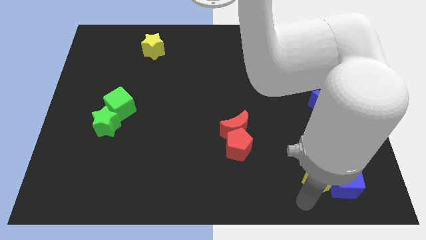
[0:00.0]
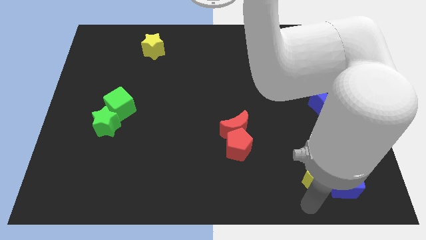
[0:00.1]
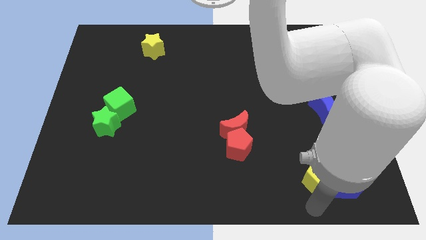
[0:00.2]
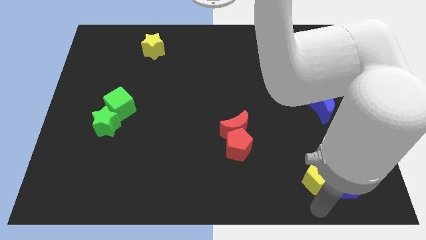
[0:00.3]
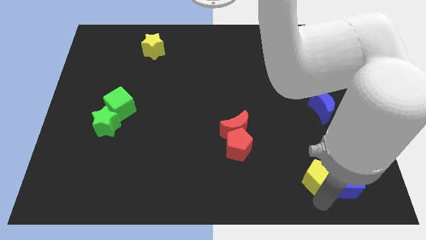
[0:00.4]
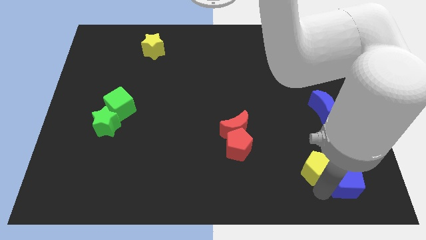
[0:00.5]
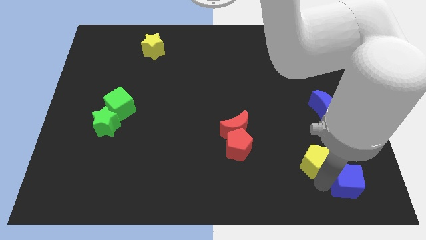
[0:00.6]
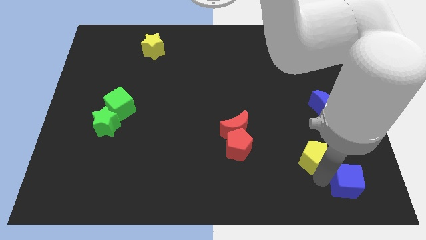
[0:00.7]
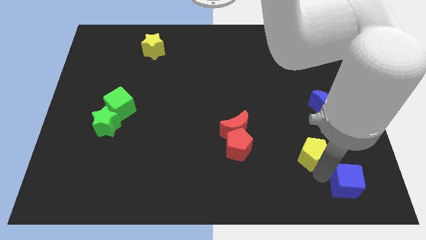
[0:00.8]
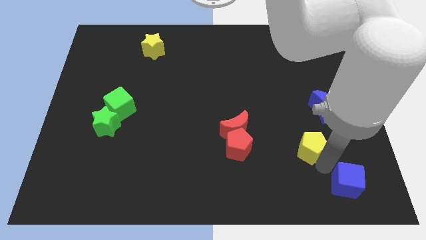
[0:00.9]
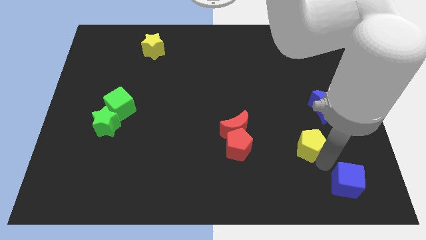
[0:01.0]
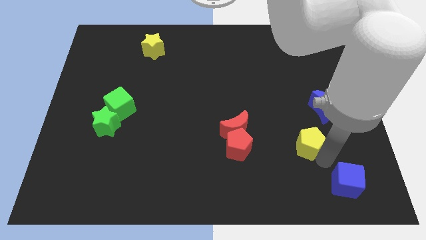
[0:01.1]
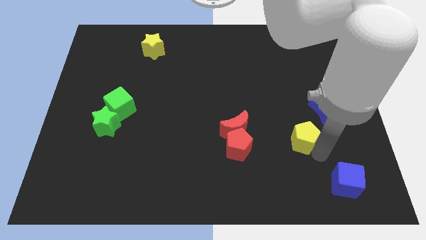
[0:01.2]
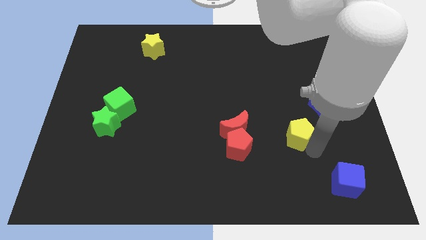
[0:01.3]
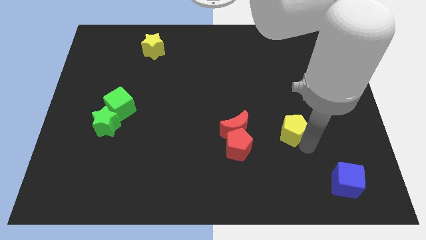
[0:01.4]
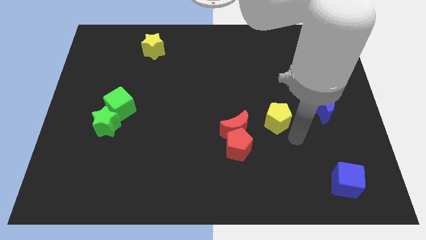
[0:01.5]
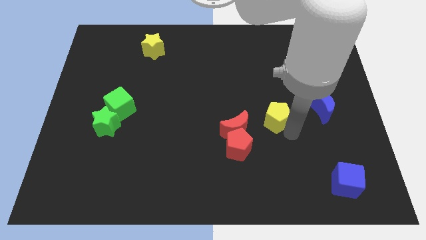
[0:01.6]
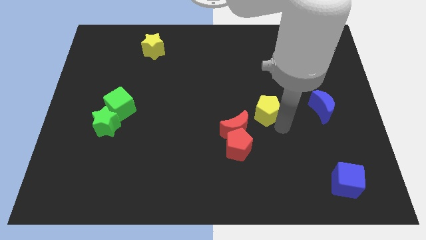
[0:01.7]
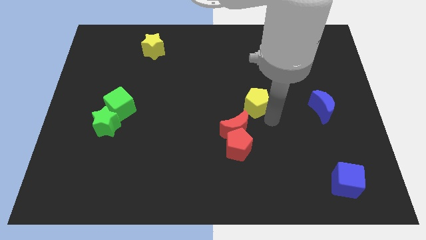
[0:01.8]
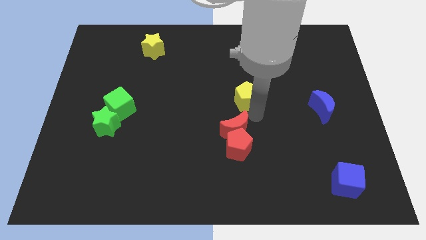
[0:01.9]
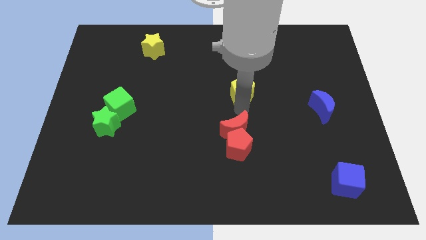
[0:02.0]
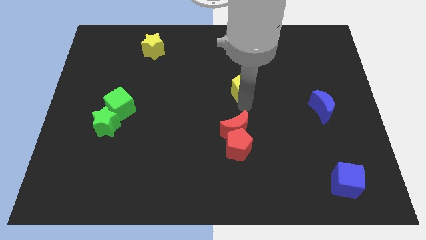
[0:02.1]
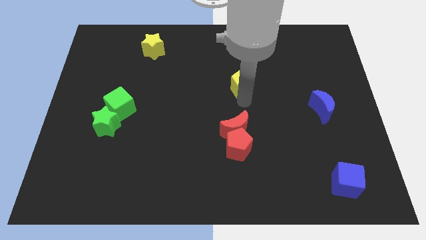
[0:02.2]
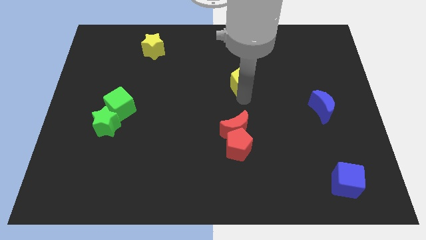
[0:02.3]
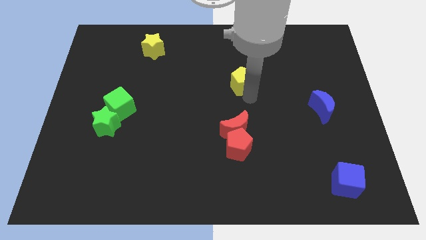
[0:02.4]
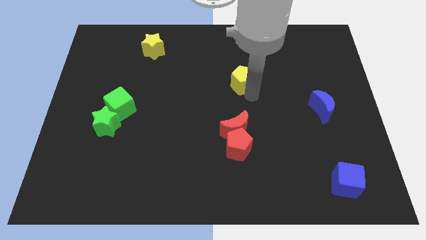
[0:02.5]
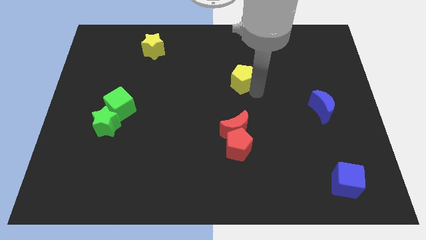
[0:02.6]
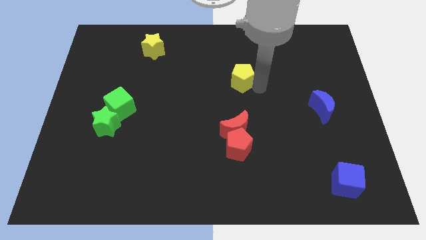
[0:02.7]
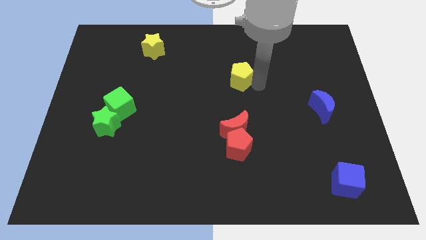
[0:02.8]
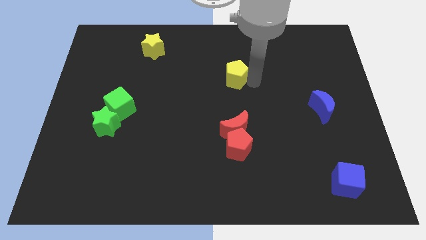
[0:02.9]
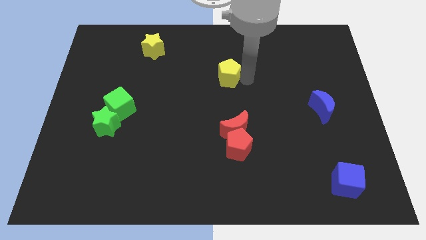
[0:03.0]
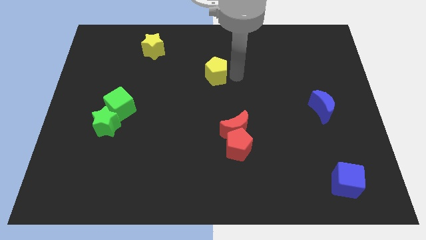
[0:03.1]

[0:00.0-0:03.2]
move the yellow pentagon on the top of the red moon vertically

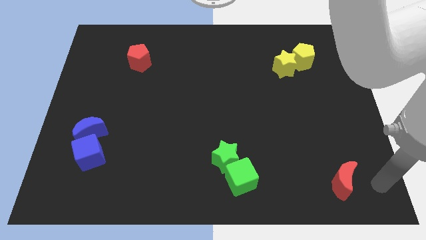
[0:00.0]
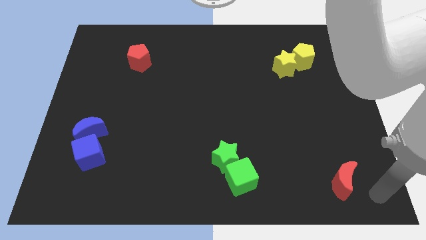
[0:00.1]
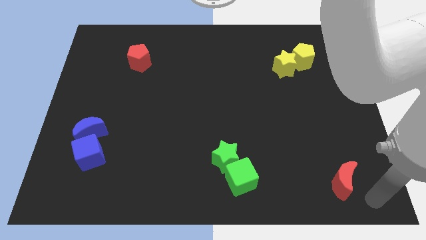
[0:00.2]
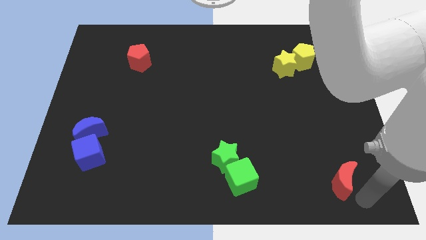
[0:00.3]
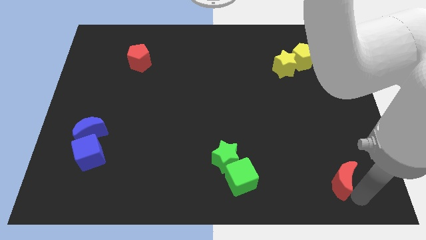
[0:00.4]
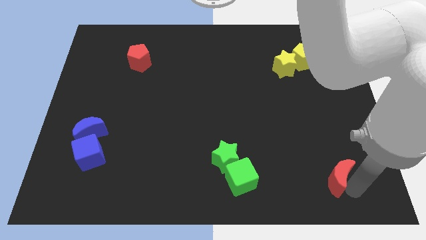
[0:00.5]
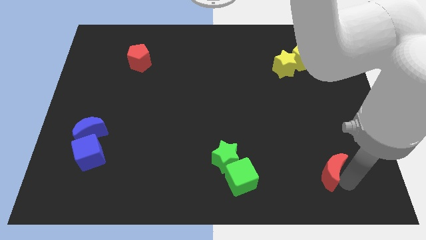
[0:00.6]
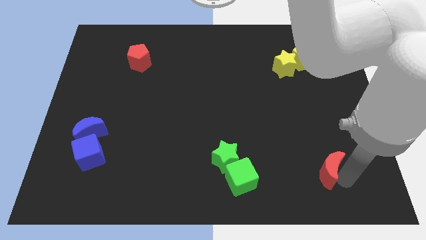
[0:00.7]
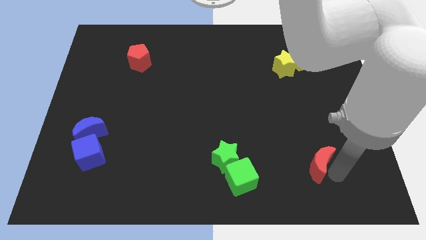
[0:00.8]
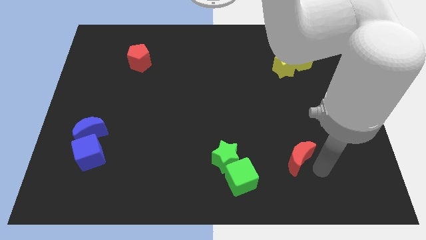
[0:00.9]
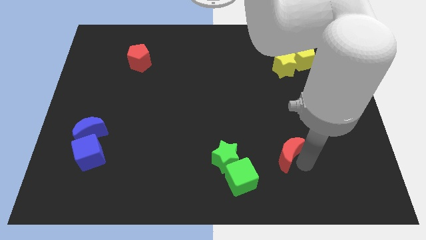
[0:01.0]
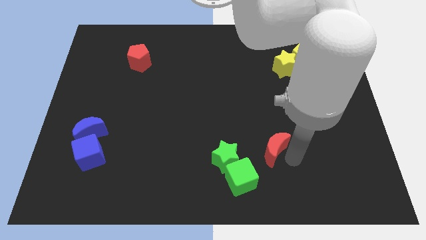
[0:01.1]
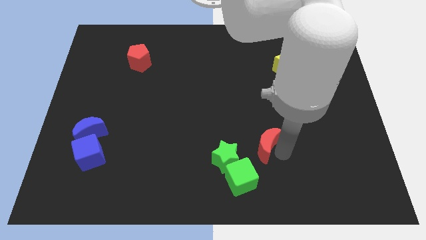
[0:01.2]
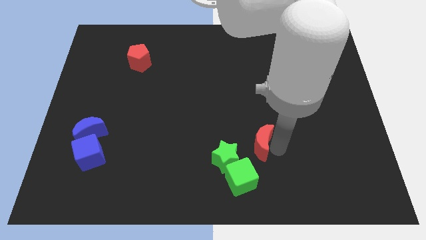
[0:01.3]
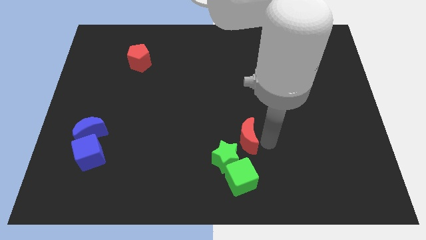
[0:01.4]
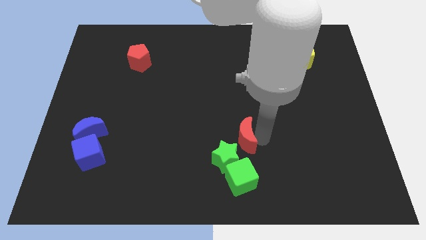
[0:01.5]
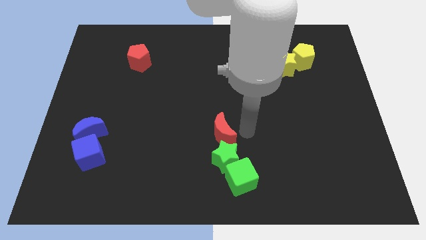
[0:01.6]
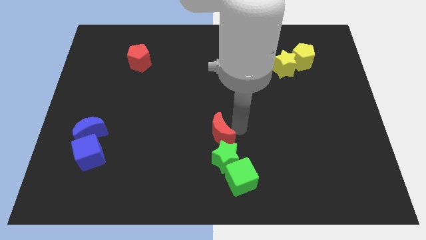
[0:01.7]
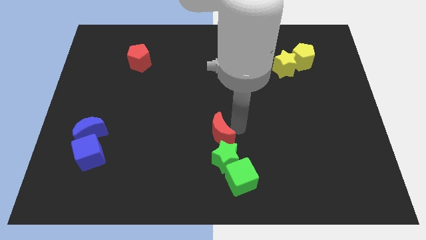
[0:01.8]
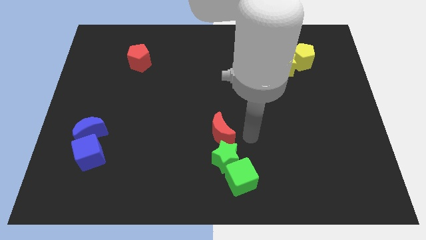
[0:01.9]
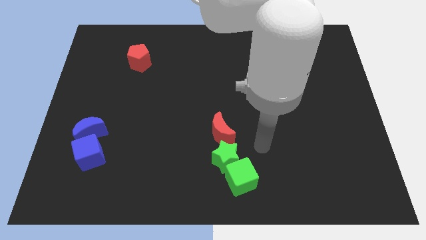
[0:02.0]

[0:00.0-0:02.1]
push red moon on top of green star

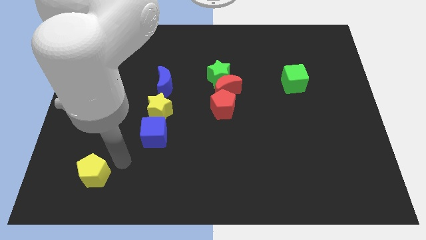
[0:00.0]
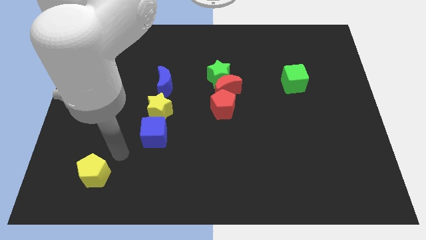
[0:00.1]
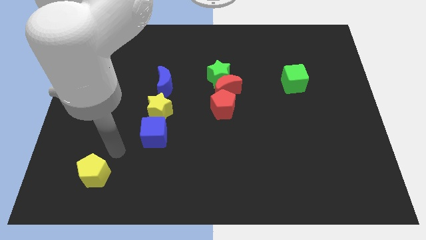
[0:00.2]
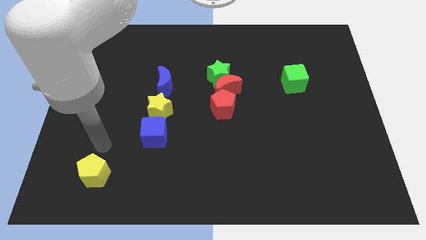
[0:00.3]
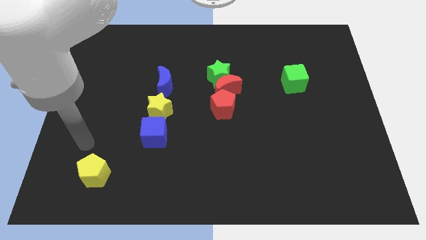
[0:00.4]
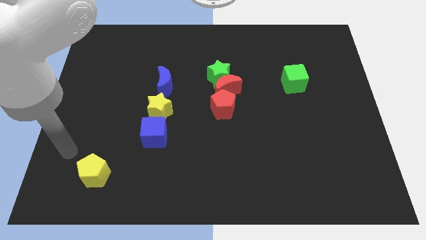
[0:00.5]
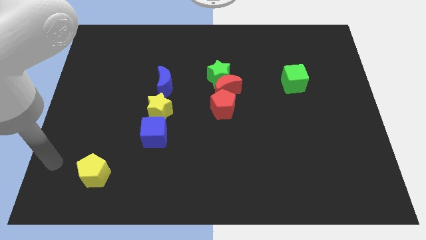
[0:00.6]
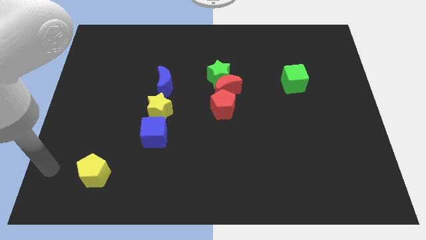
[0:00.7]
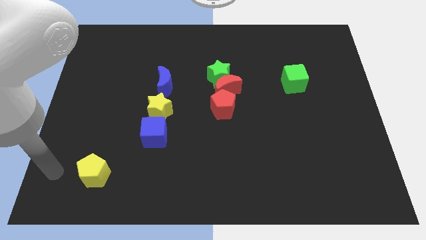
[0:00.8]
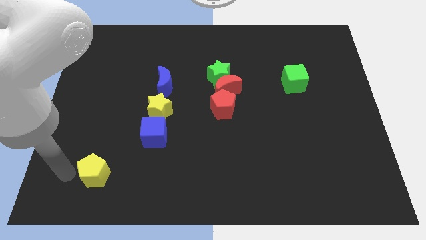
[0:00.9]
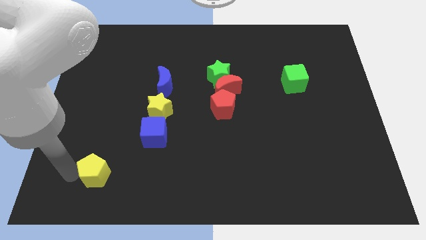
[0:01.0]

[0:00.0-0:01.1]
touch the left side of the yellow pentagon

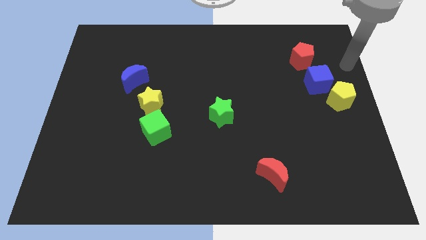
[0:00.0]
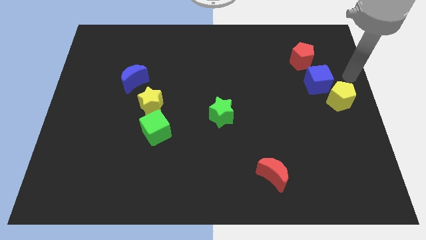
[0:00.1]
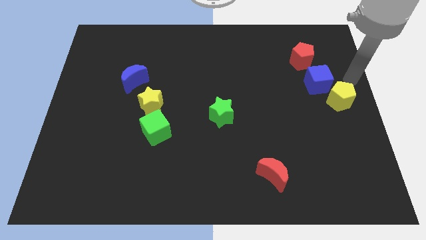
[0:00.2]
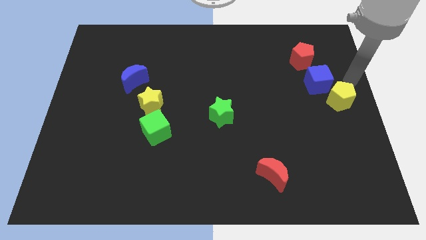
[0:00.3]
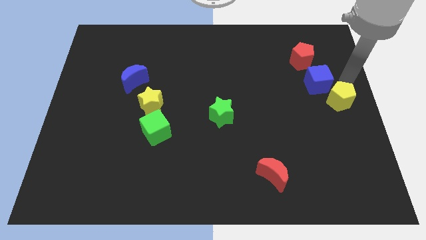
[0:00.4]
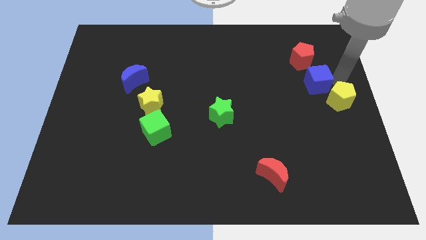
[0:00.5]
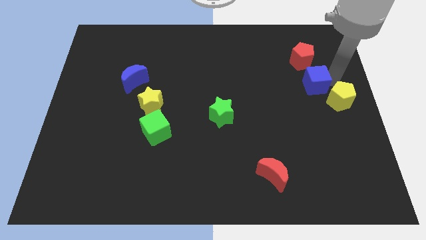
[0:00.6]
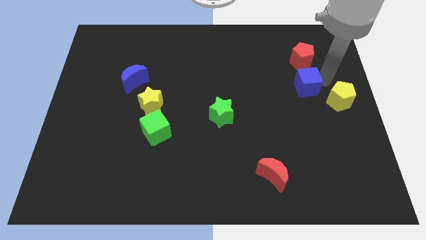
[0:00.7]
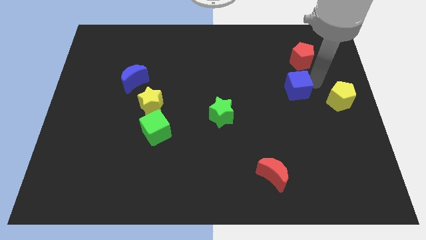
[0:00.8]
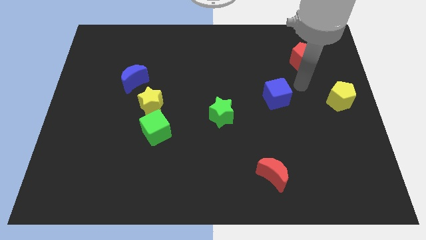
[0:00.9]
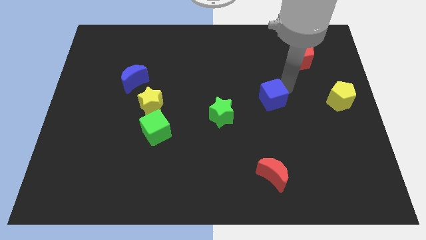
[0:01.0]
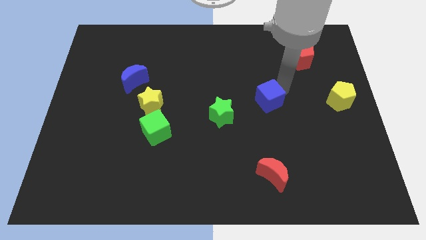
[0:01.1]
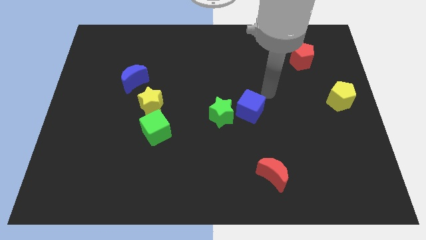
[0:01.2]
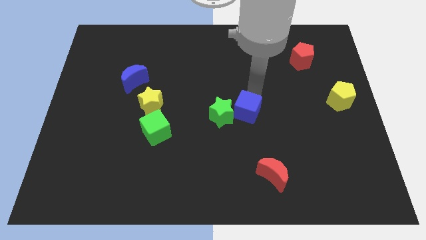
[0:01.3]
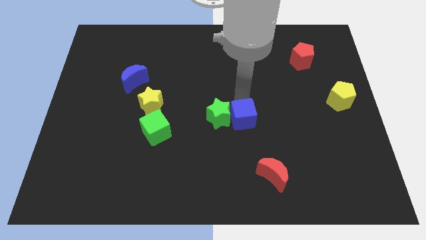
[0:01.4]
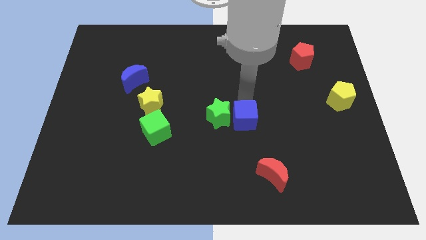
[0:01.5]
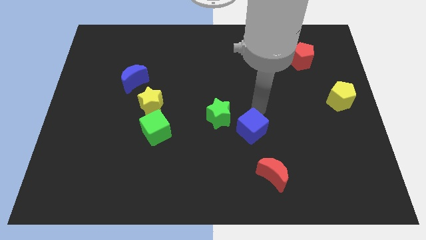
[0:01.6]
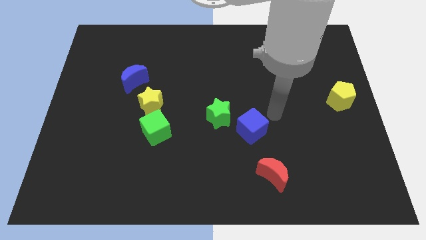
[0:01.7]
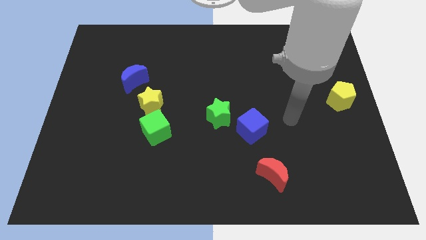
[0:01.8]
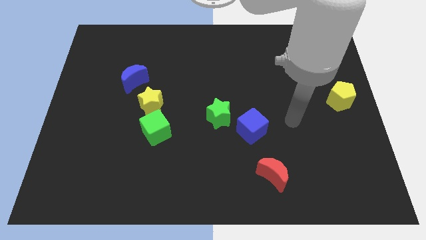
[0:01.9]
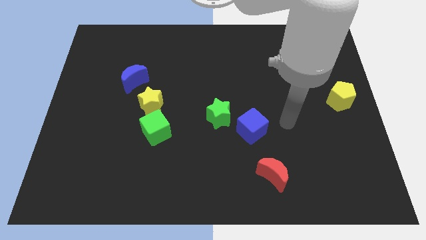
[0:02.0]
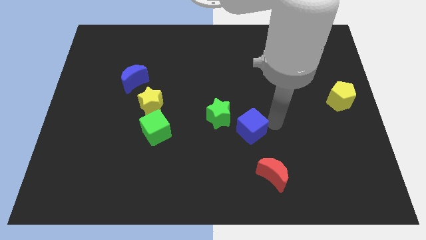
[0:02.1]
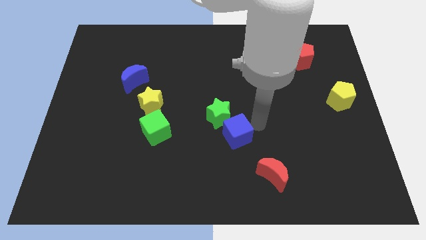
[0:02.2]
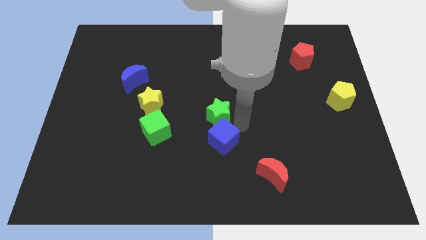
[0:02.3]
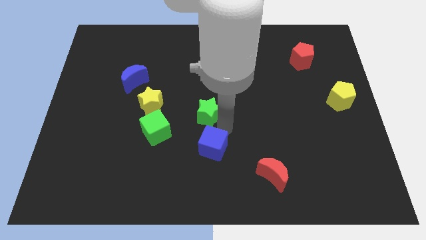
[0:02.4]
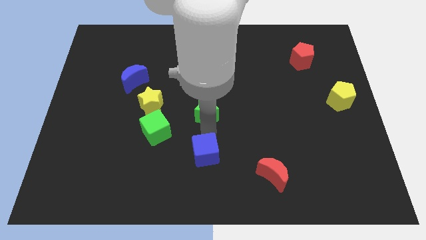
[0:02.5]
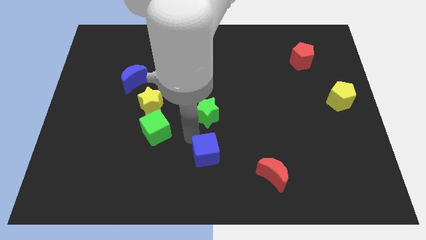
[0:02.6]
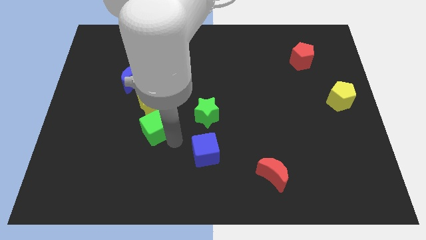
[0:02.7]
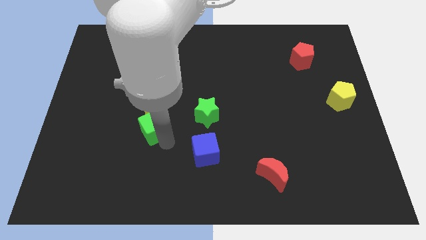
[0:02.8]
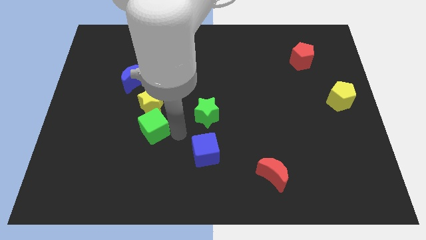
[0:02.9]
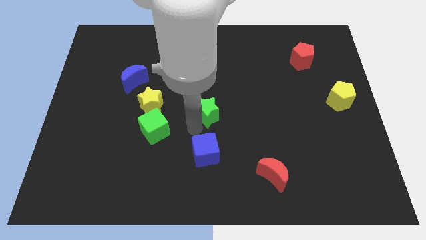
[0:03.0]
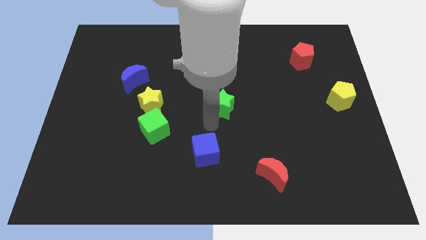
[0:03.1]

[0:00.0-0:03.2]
place the blue cube in between the green cube and the red crescent
